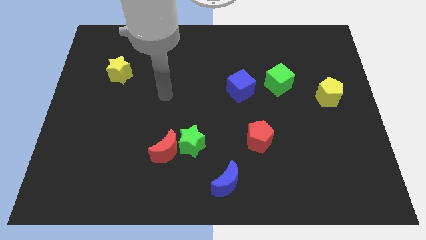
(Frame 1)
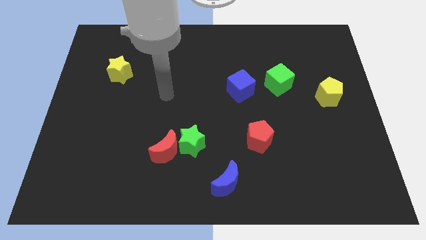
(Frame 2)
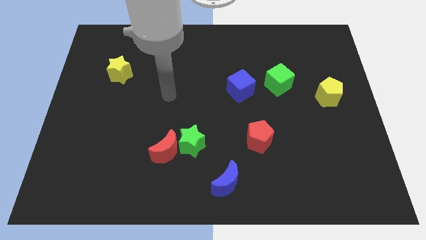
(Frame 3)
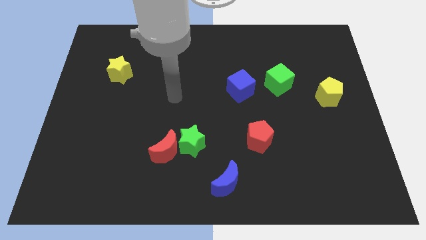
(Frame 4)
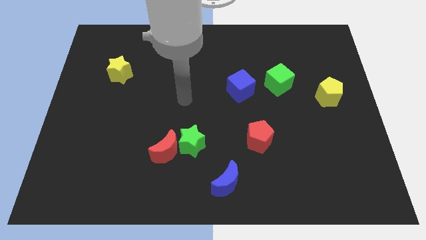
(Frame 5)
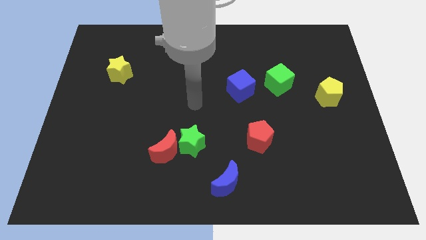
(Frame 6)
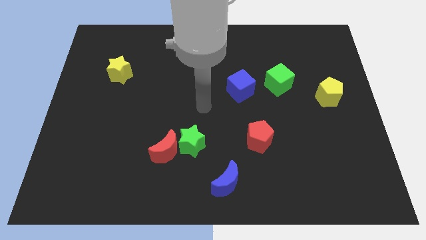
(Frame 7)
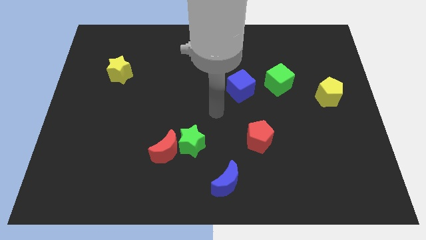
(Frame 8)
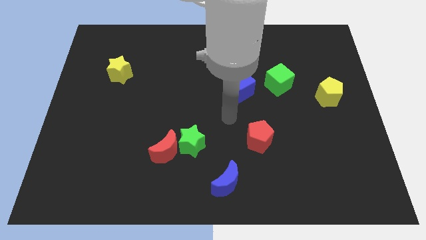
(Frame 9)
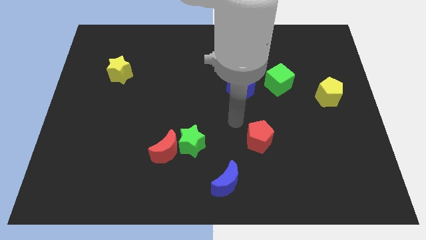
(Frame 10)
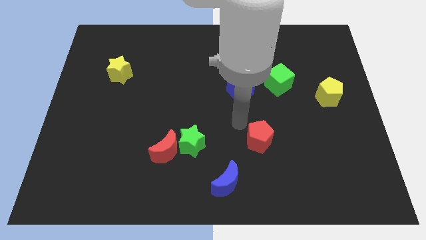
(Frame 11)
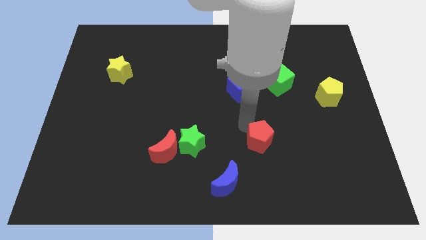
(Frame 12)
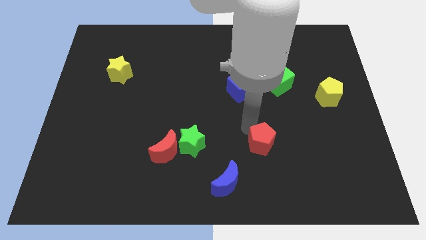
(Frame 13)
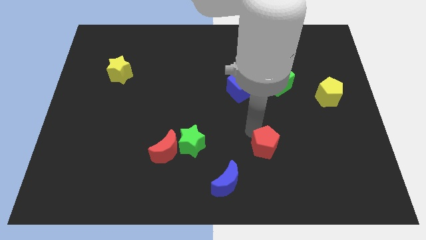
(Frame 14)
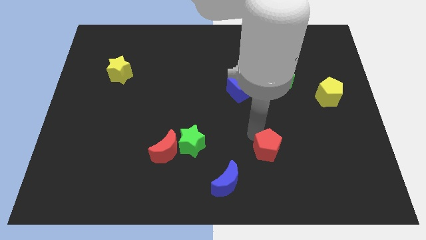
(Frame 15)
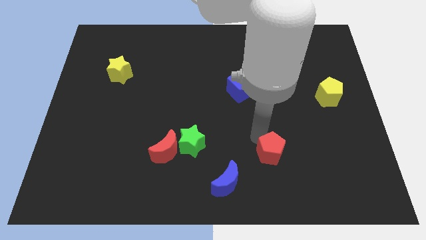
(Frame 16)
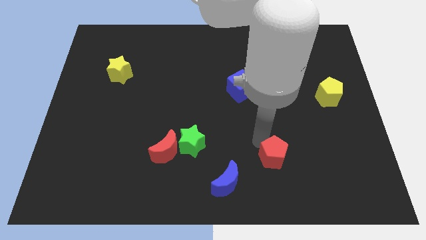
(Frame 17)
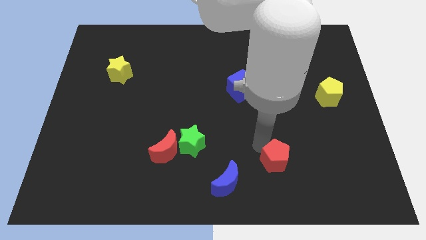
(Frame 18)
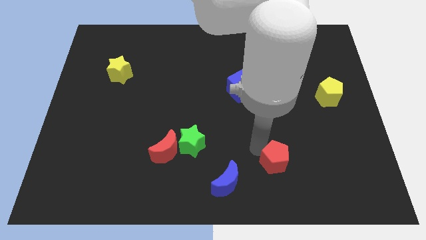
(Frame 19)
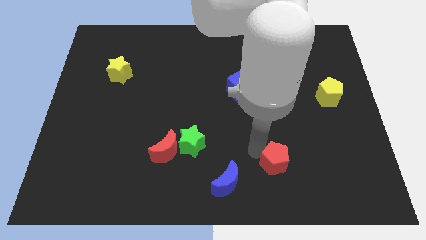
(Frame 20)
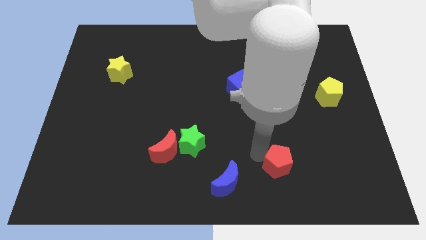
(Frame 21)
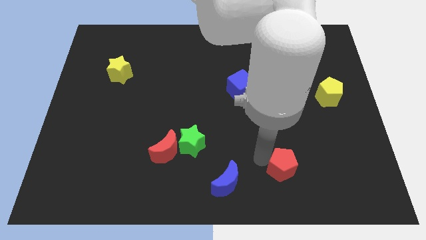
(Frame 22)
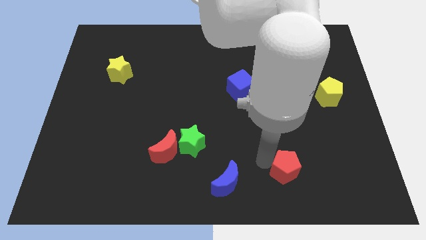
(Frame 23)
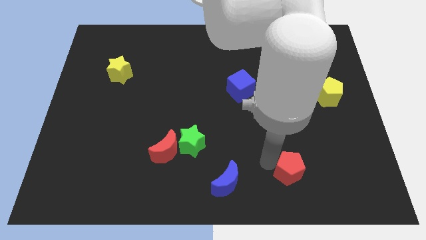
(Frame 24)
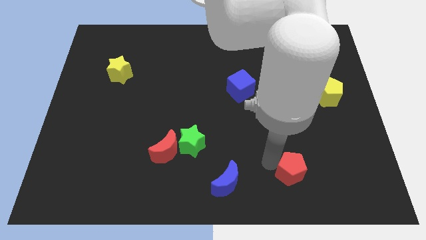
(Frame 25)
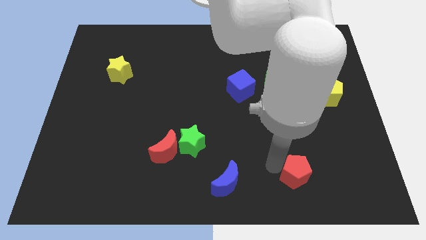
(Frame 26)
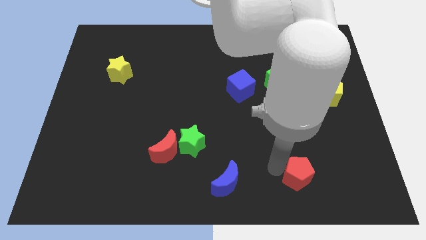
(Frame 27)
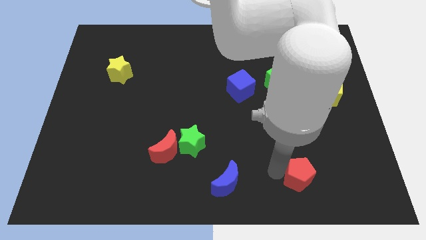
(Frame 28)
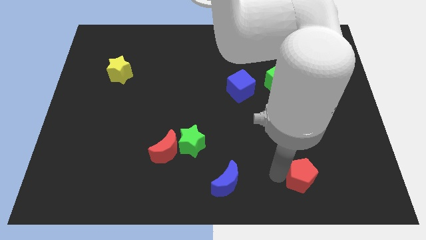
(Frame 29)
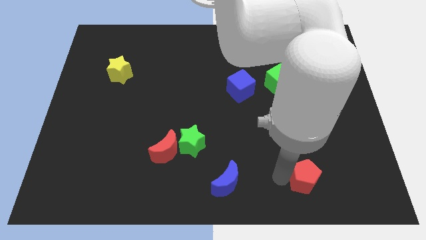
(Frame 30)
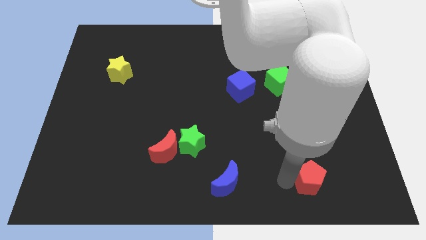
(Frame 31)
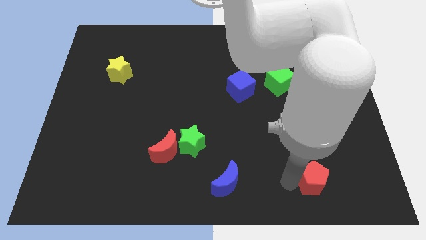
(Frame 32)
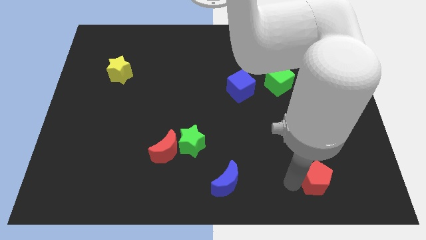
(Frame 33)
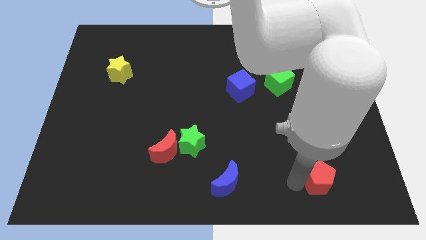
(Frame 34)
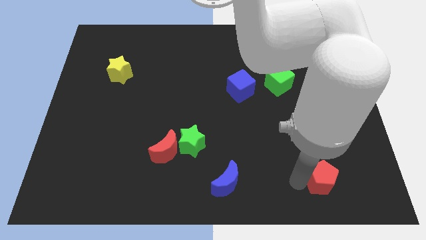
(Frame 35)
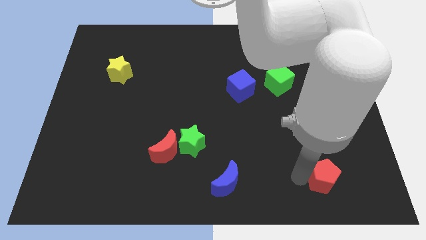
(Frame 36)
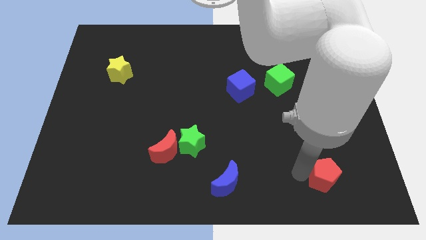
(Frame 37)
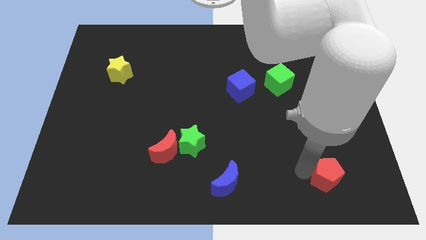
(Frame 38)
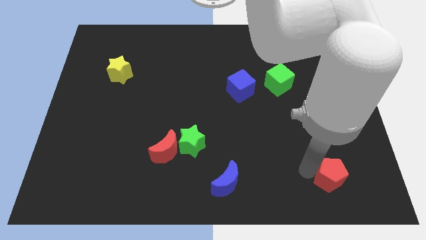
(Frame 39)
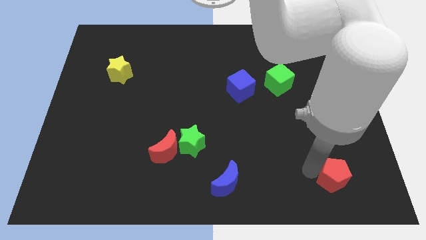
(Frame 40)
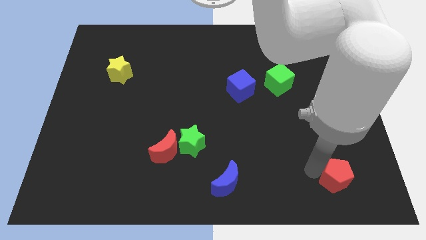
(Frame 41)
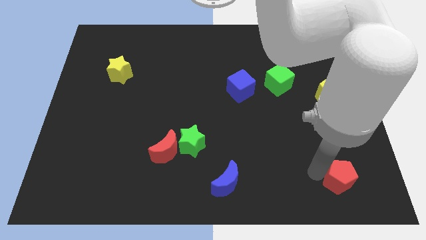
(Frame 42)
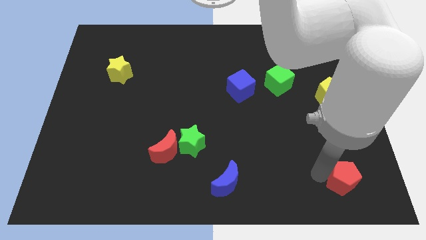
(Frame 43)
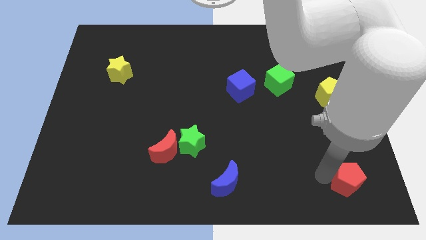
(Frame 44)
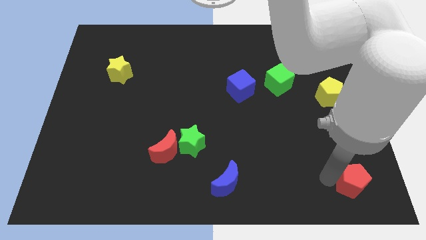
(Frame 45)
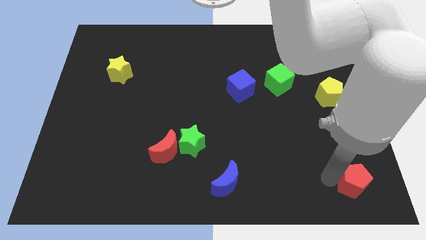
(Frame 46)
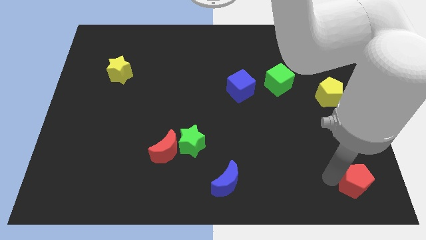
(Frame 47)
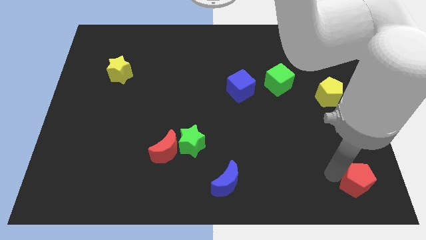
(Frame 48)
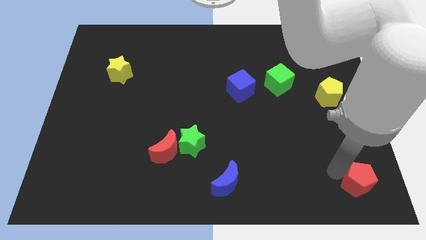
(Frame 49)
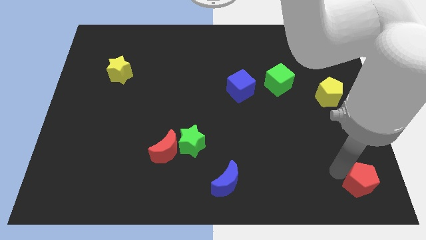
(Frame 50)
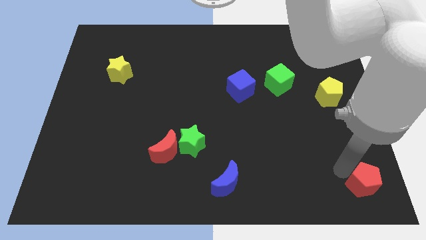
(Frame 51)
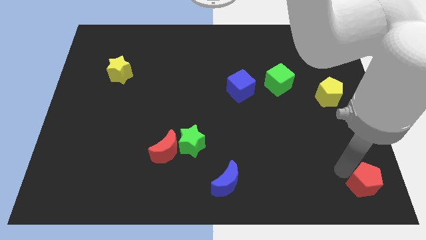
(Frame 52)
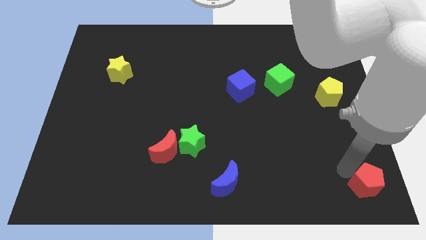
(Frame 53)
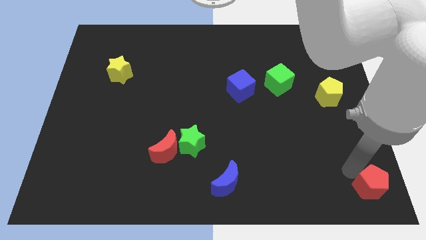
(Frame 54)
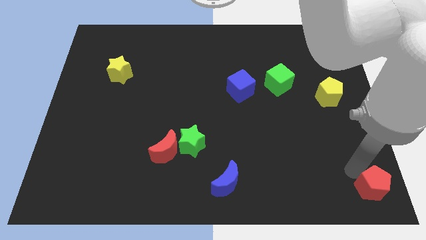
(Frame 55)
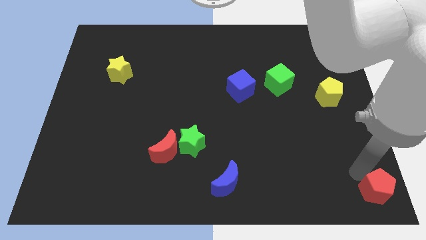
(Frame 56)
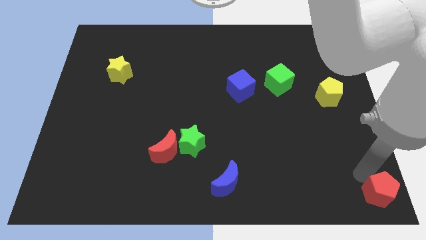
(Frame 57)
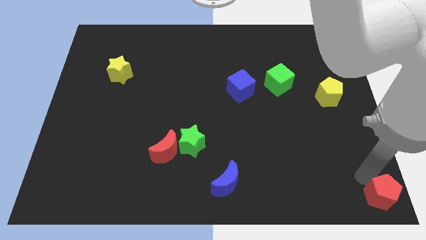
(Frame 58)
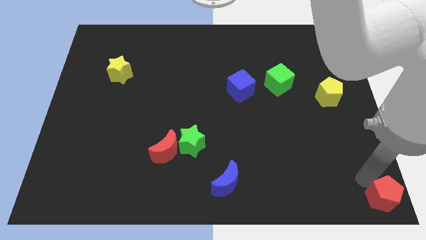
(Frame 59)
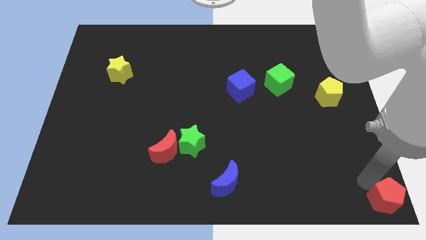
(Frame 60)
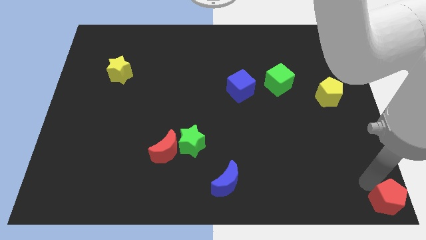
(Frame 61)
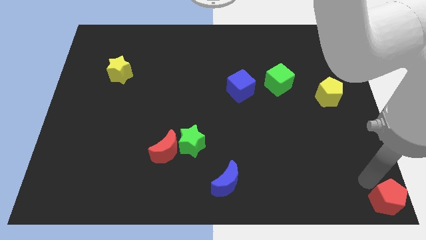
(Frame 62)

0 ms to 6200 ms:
push the red pentagon towards the bottom right of the board

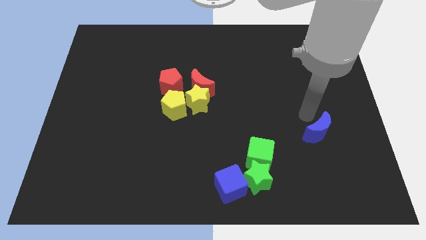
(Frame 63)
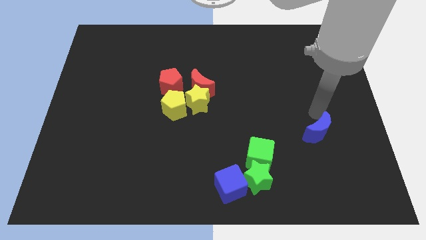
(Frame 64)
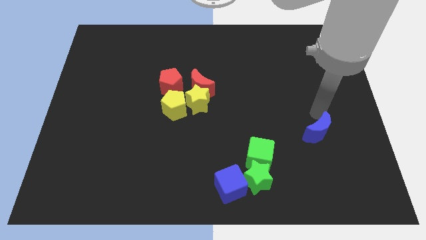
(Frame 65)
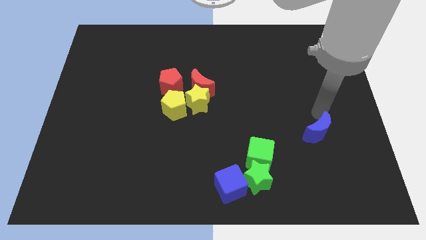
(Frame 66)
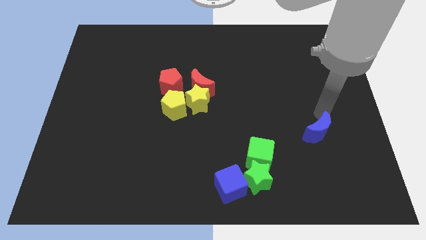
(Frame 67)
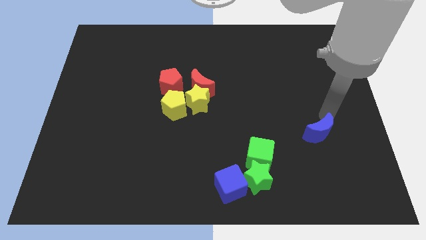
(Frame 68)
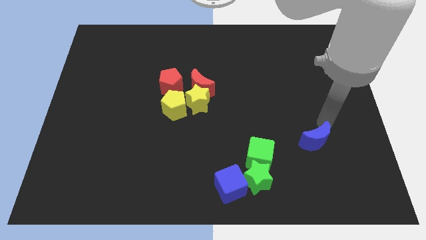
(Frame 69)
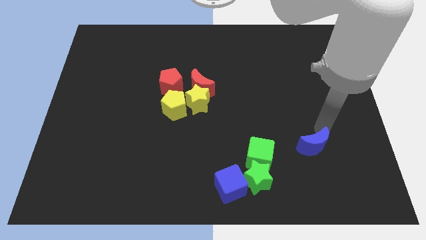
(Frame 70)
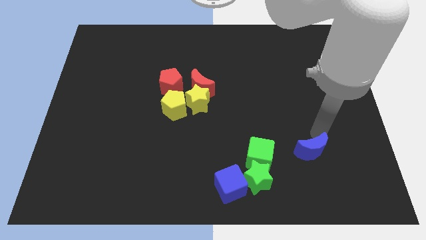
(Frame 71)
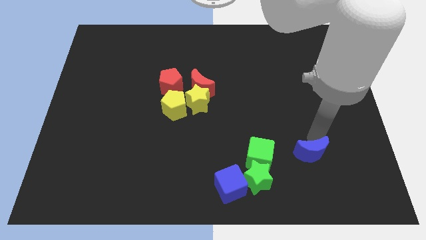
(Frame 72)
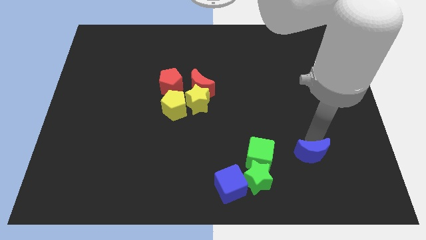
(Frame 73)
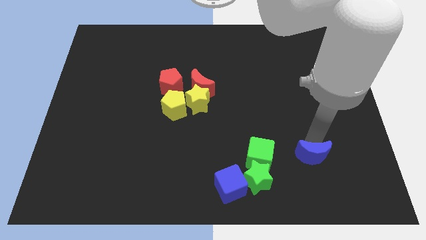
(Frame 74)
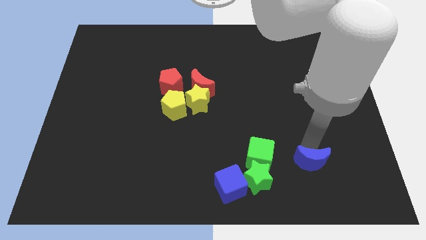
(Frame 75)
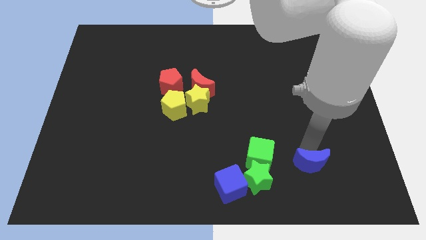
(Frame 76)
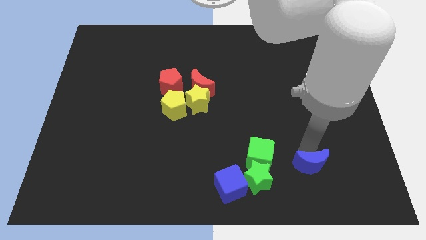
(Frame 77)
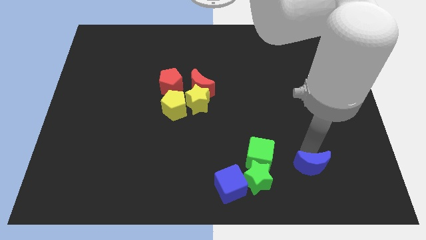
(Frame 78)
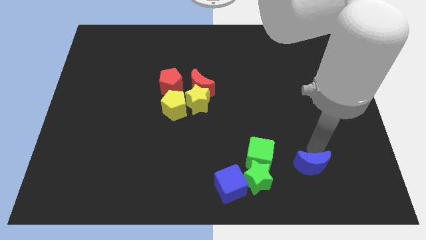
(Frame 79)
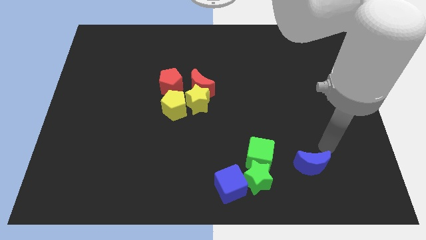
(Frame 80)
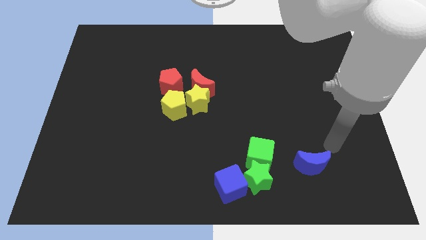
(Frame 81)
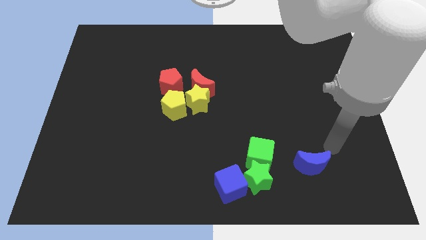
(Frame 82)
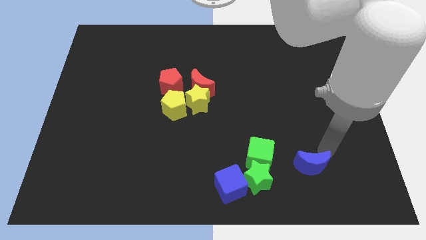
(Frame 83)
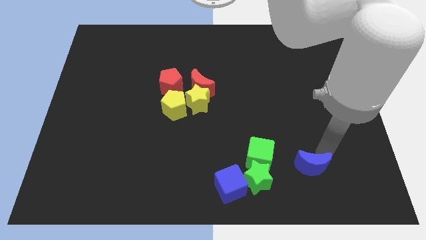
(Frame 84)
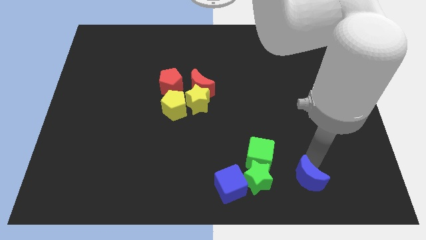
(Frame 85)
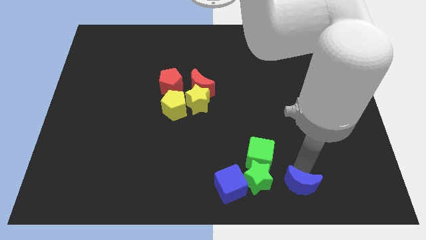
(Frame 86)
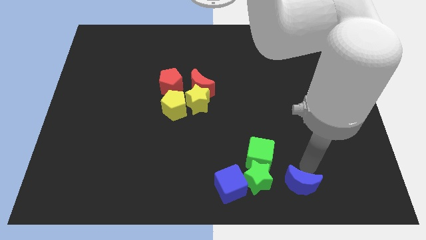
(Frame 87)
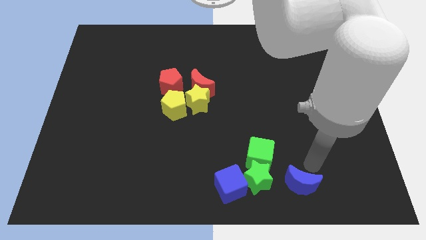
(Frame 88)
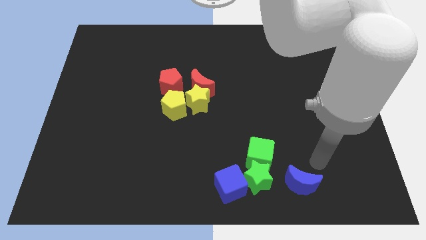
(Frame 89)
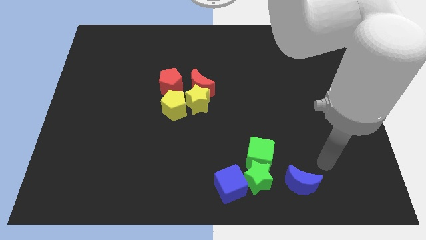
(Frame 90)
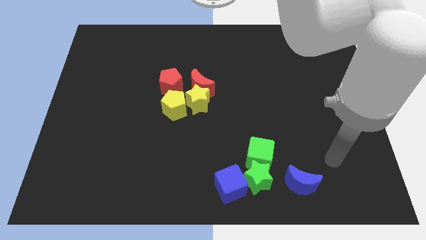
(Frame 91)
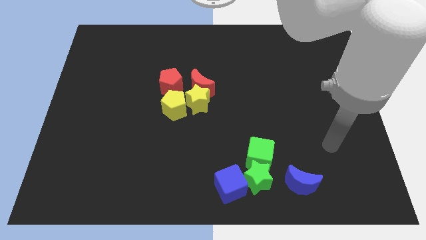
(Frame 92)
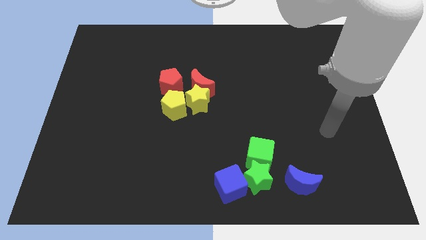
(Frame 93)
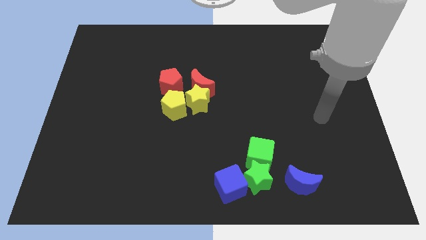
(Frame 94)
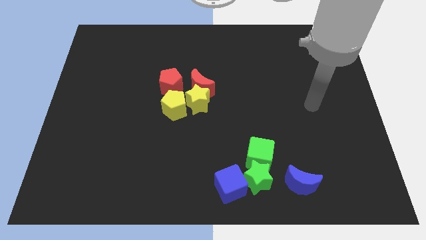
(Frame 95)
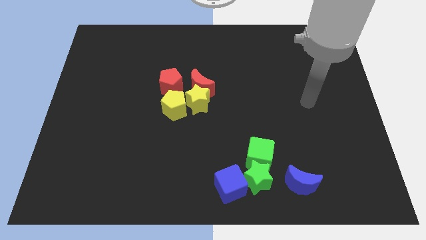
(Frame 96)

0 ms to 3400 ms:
place the blue moon right to the green star
